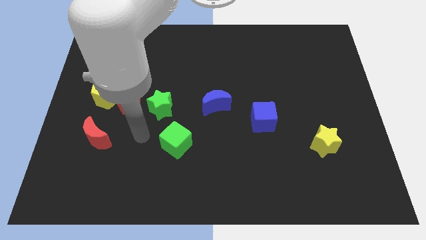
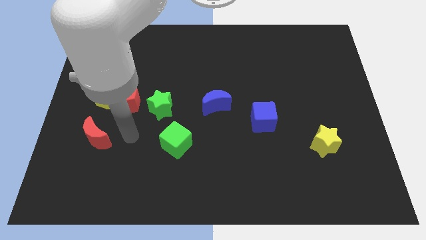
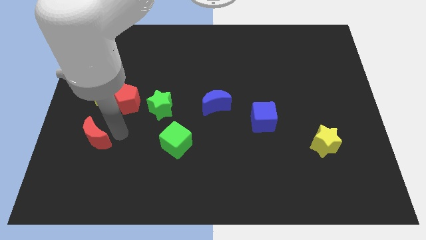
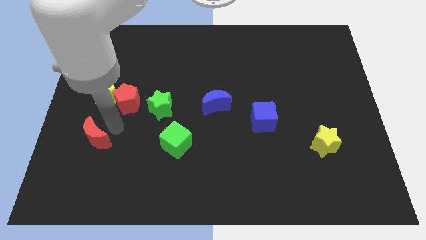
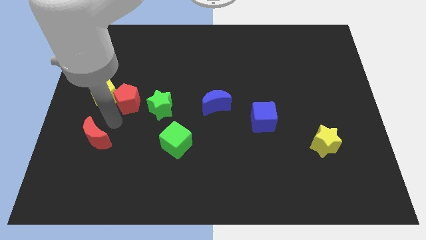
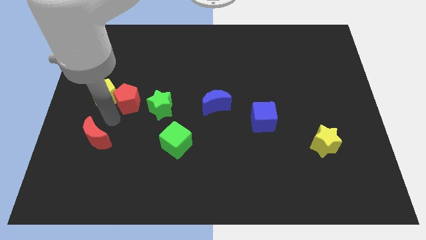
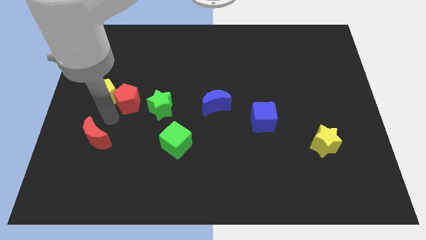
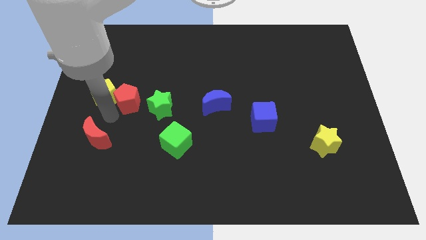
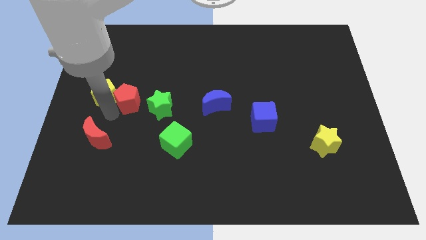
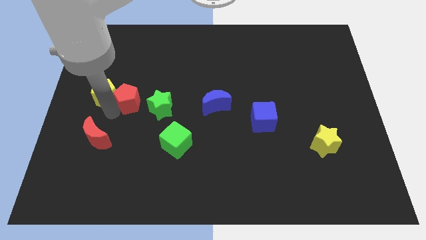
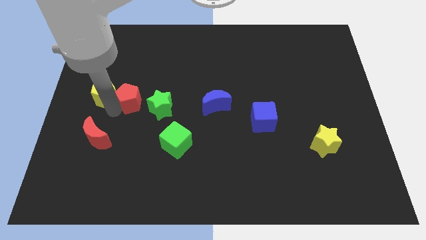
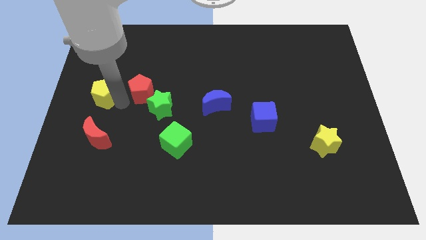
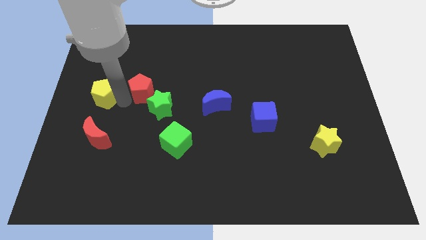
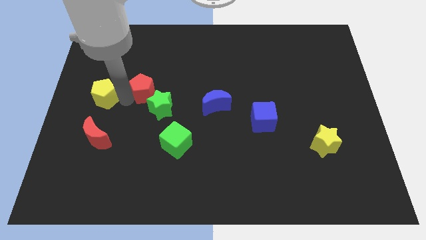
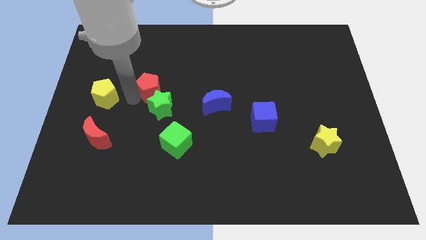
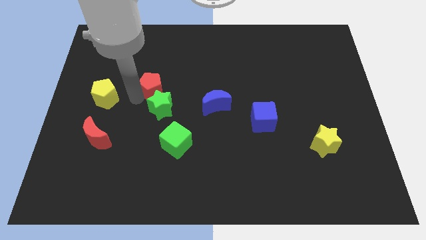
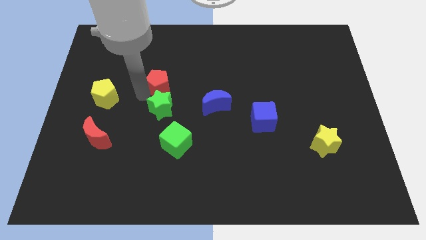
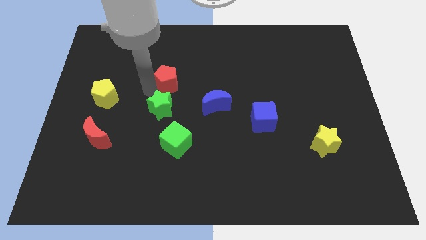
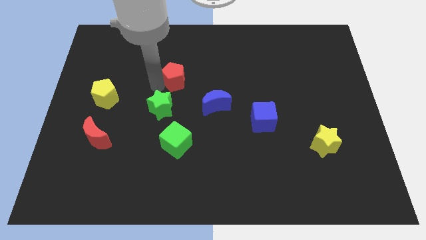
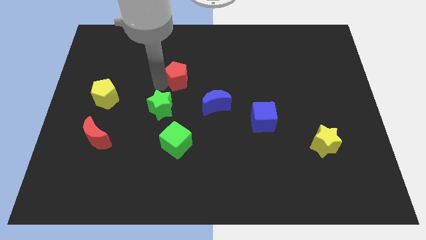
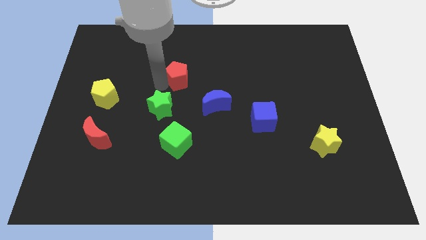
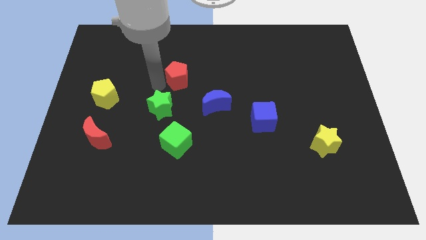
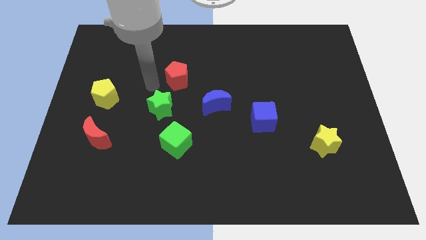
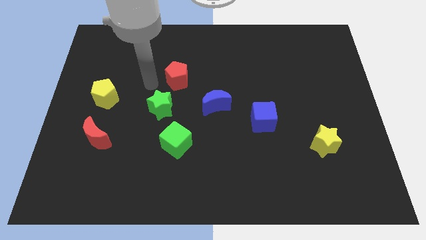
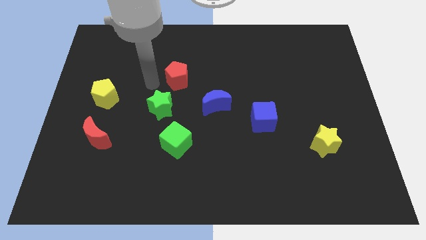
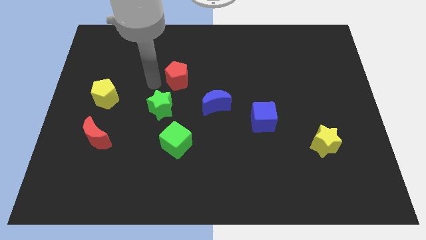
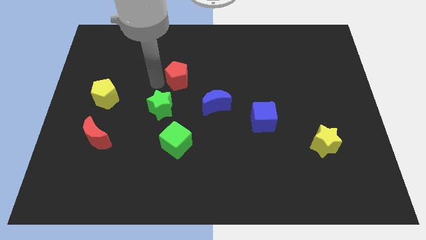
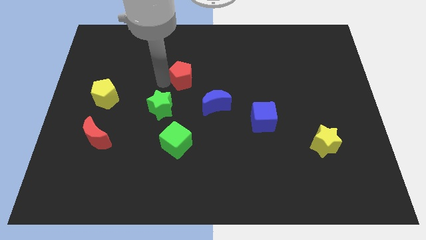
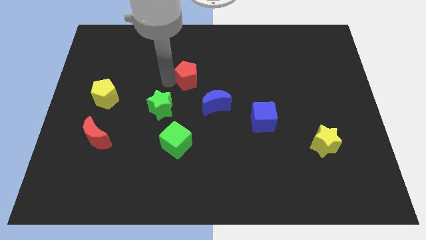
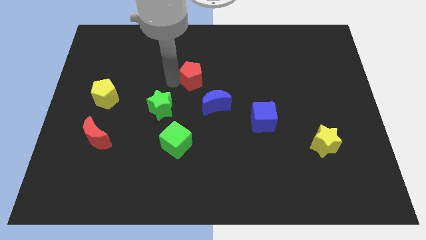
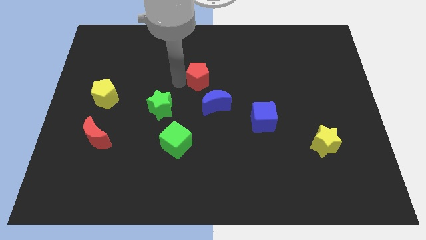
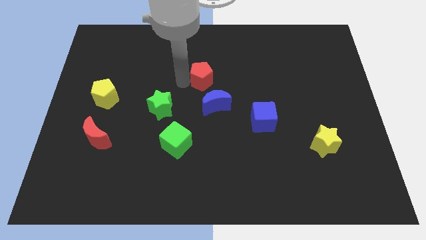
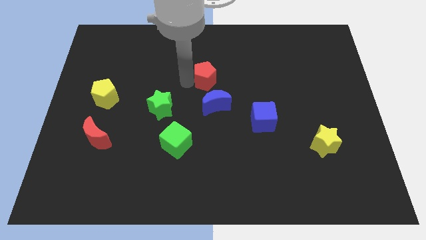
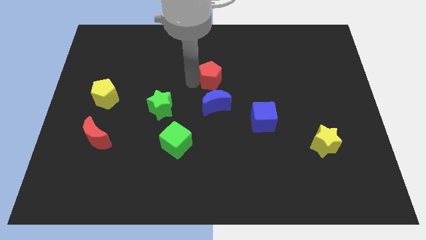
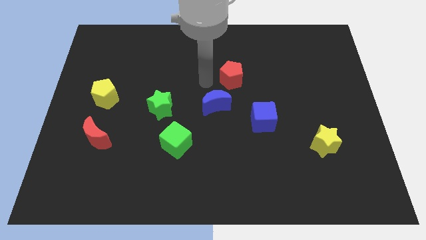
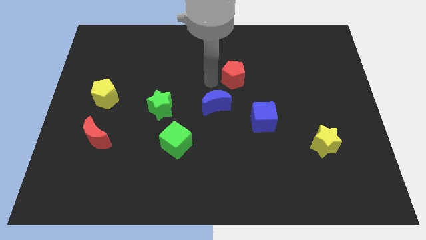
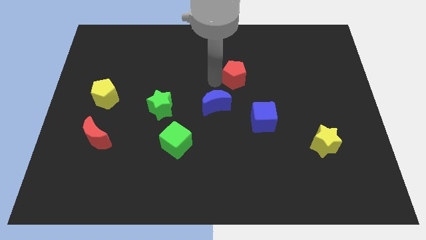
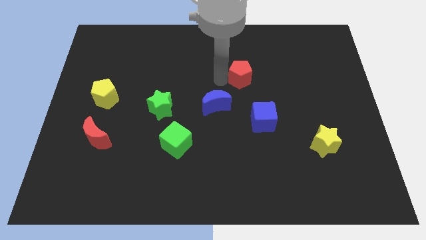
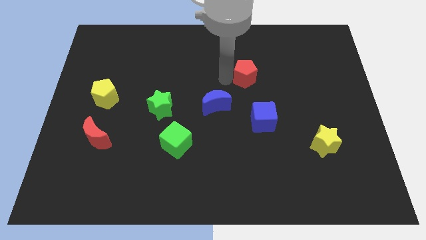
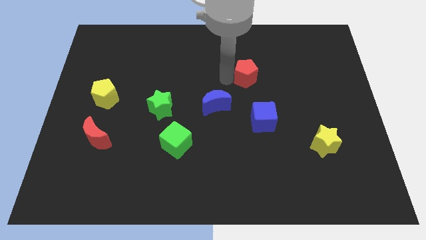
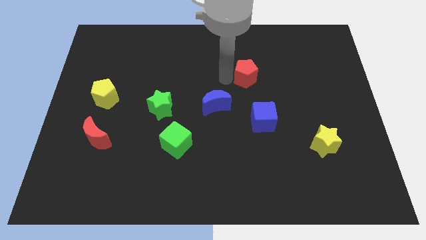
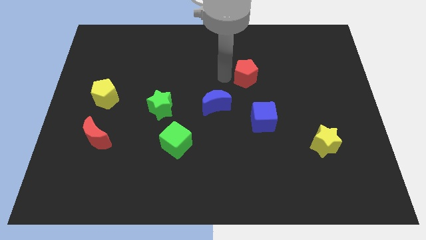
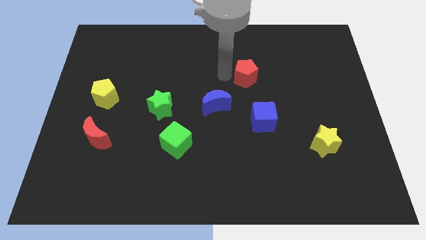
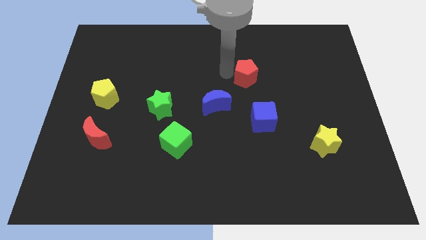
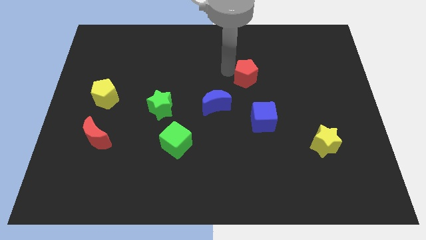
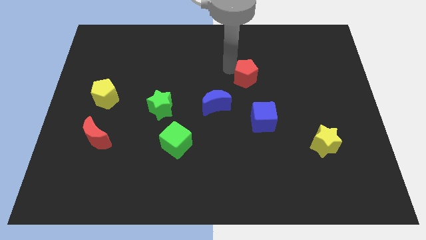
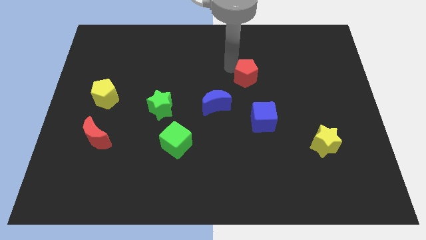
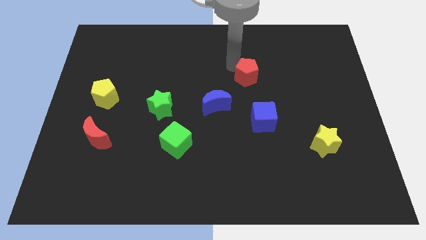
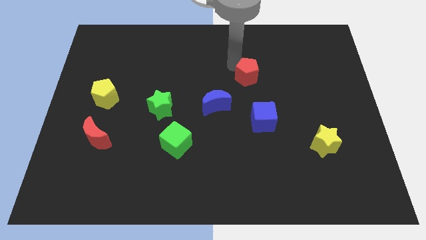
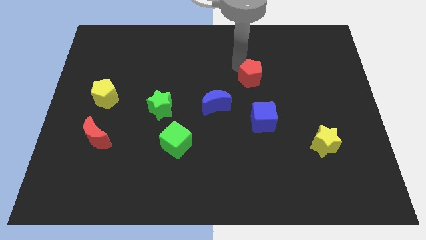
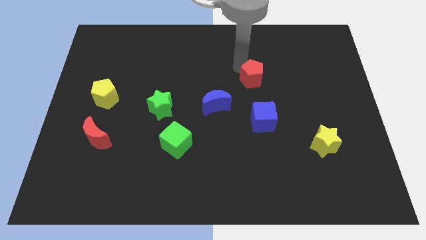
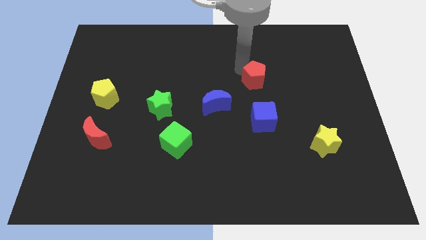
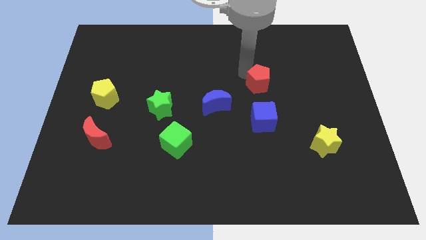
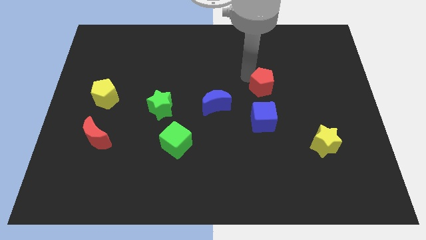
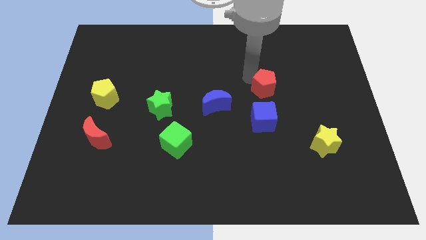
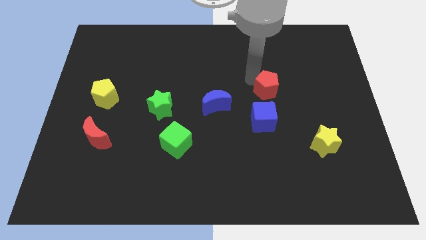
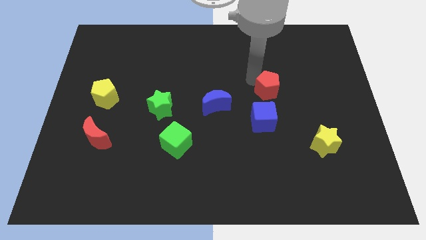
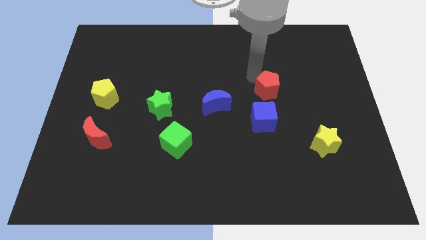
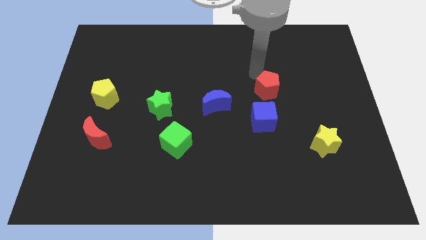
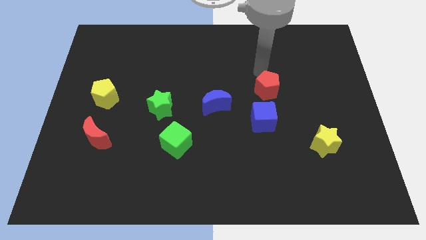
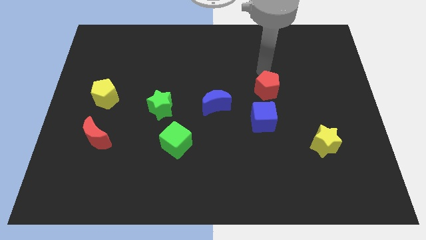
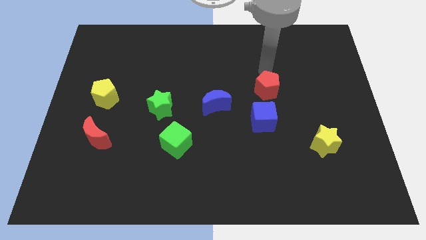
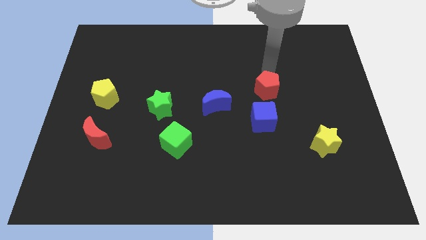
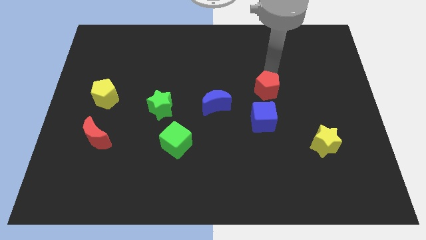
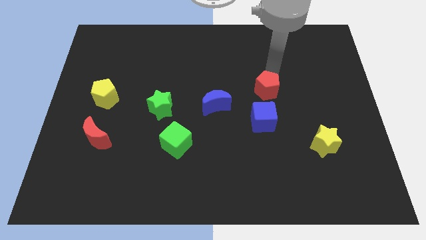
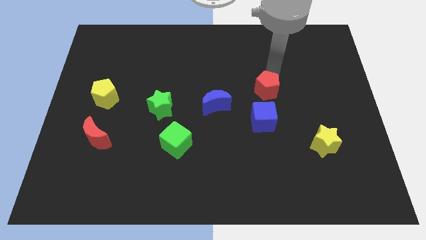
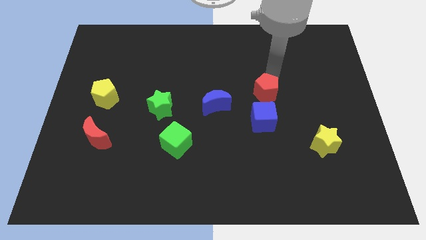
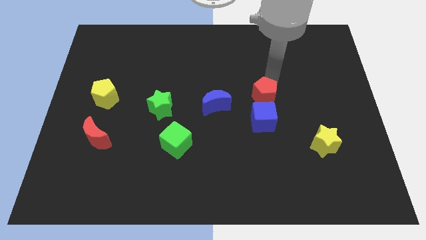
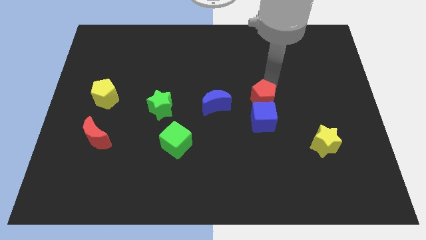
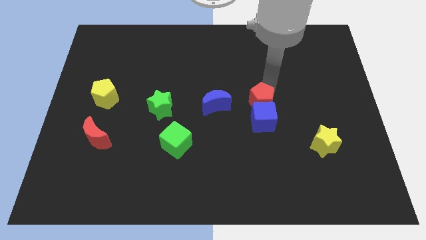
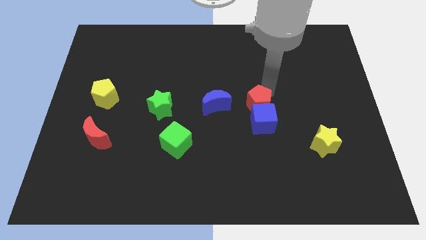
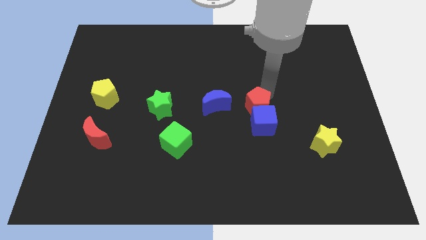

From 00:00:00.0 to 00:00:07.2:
push the red pentagon towards the blue cube

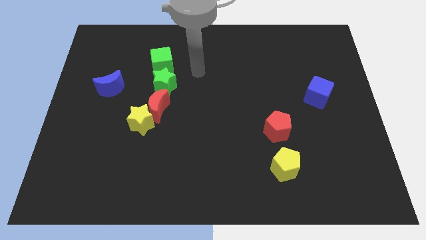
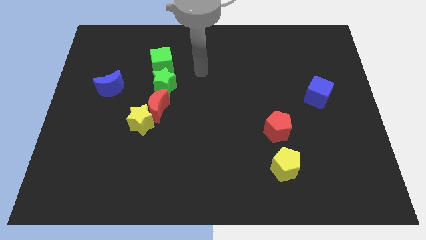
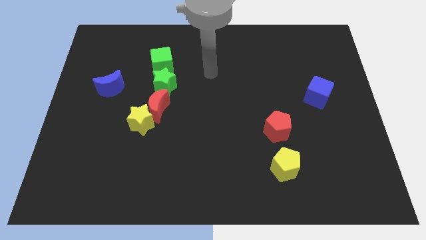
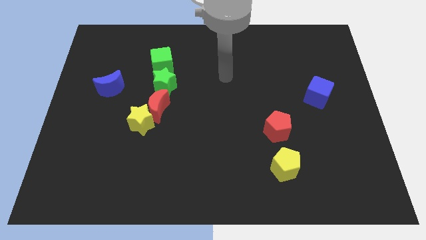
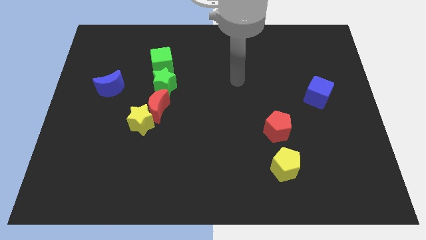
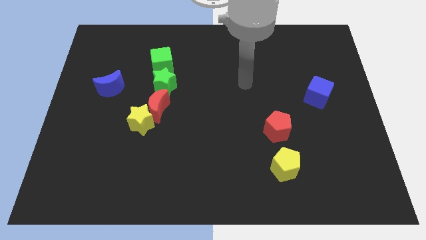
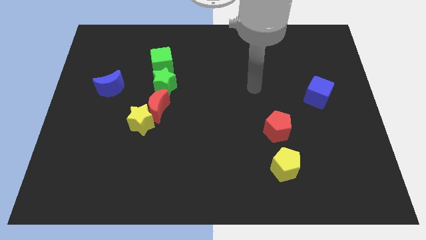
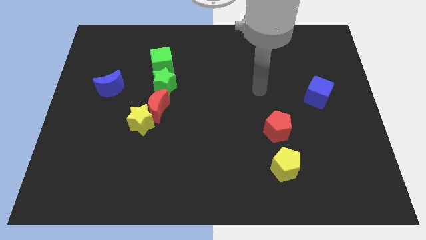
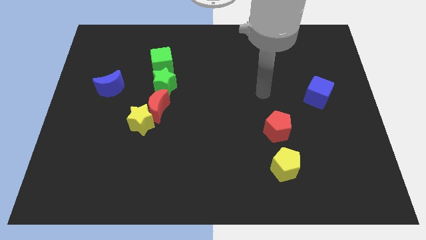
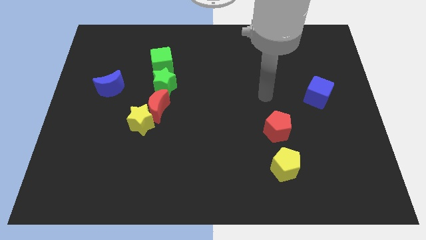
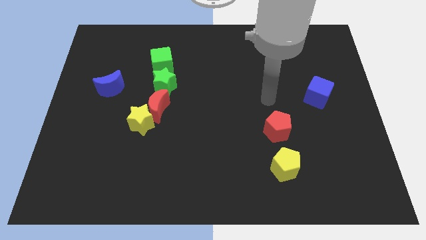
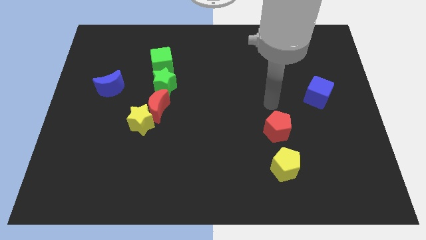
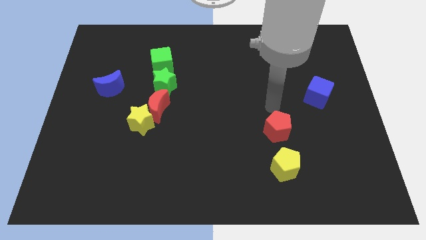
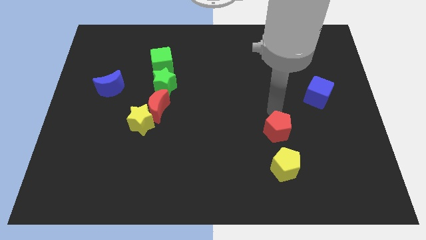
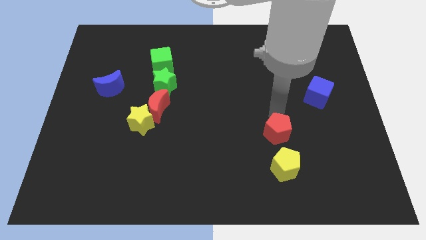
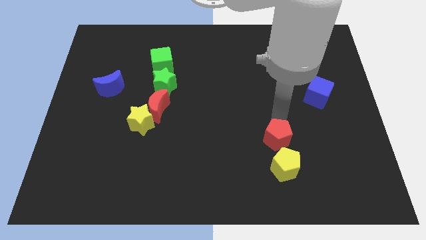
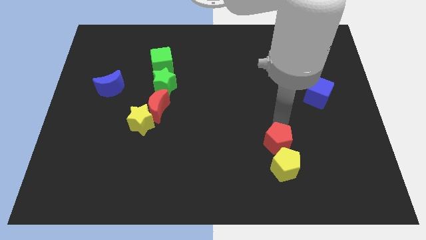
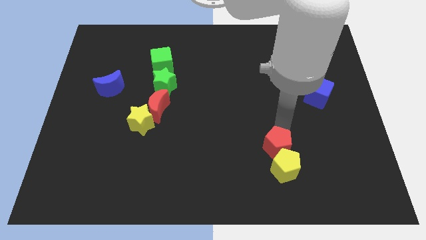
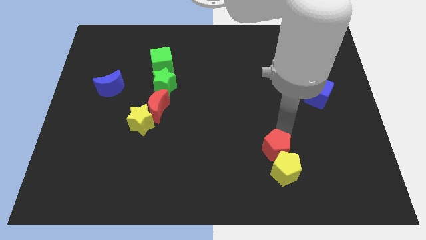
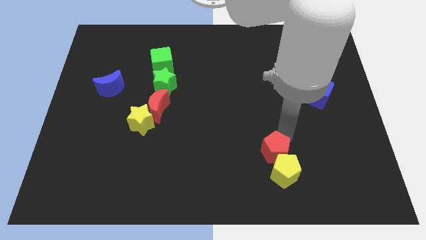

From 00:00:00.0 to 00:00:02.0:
push the red pentagon towards the yellow pentagon
